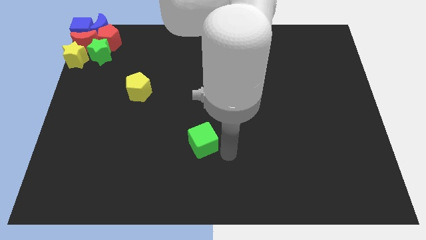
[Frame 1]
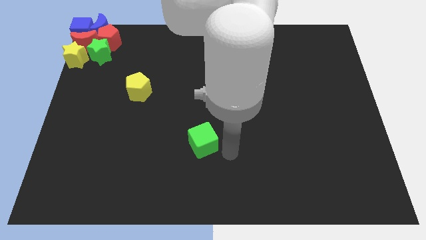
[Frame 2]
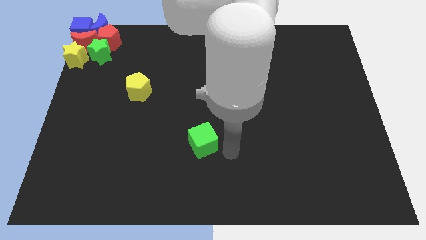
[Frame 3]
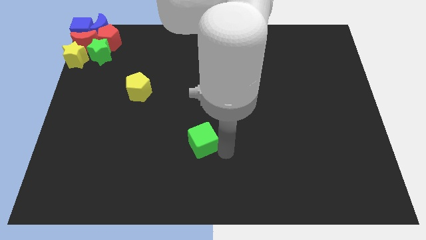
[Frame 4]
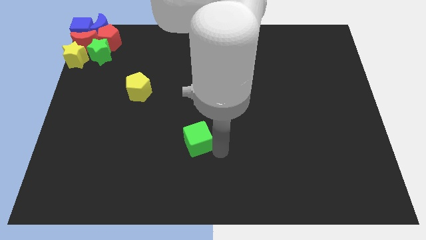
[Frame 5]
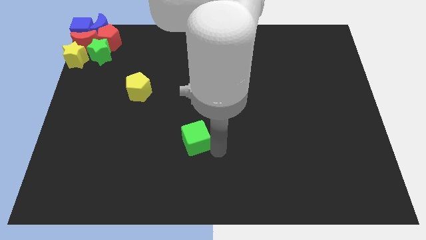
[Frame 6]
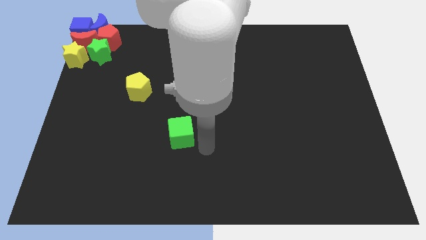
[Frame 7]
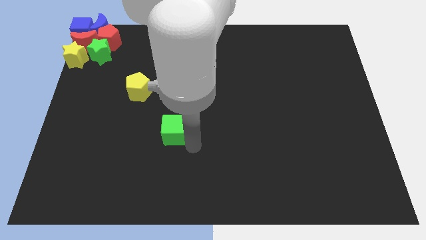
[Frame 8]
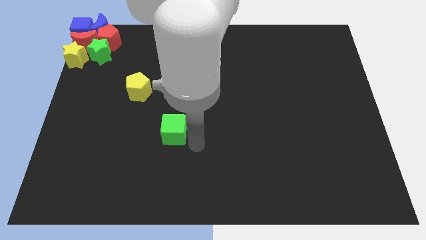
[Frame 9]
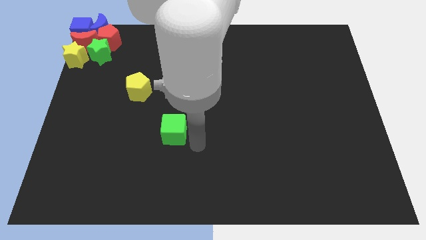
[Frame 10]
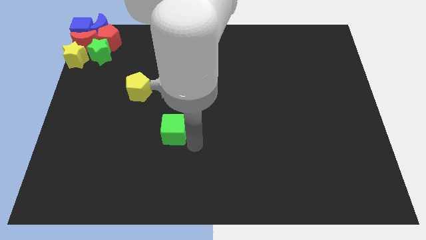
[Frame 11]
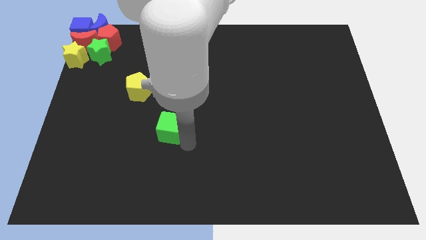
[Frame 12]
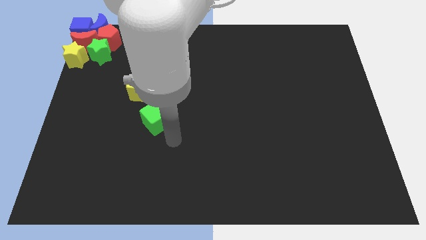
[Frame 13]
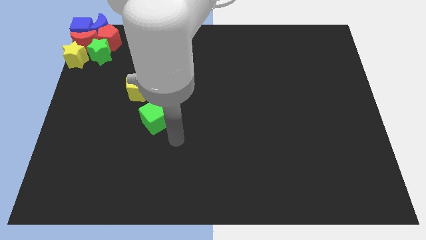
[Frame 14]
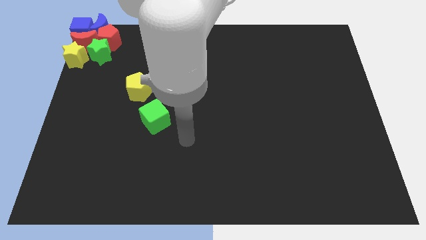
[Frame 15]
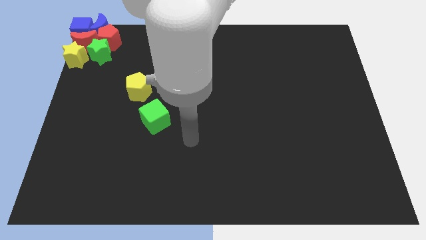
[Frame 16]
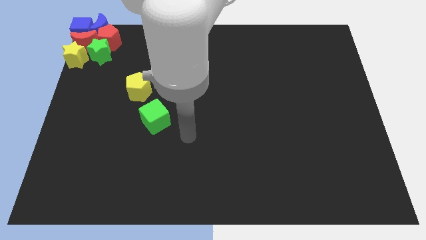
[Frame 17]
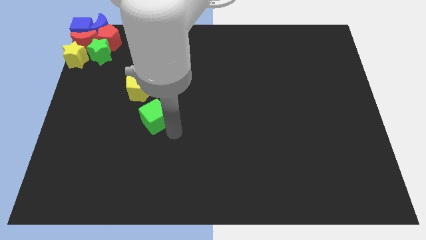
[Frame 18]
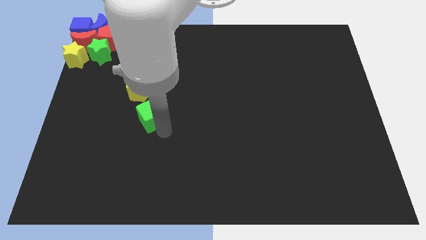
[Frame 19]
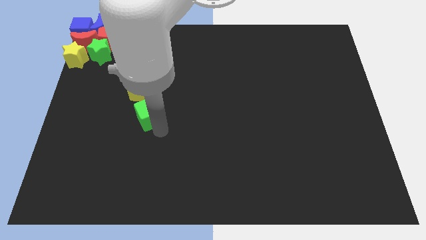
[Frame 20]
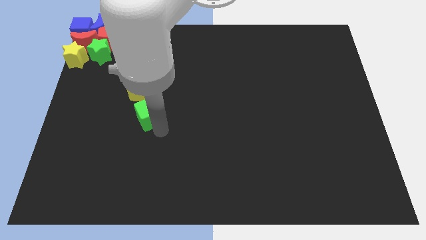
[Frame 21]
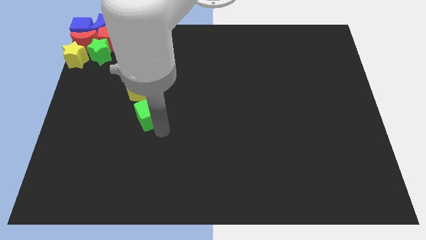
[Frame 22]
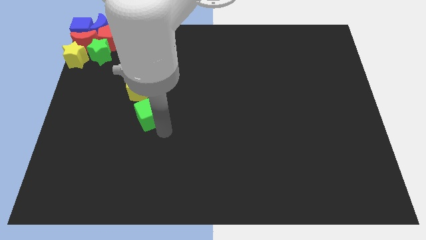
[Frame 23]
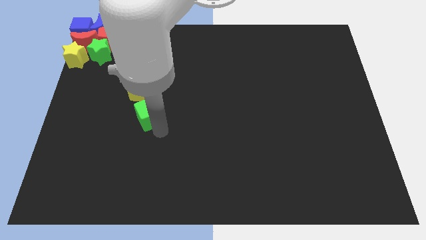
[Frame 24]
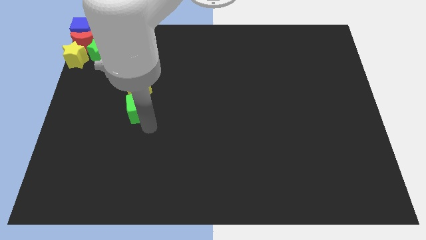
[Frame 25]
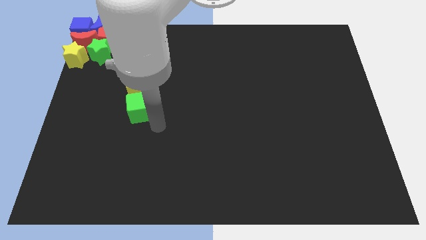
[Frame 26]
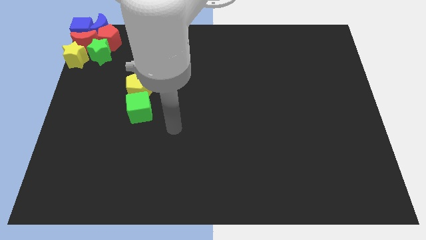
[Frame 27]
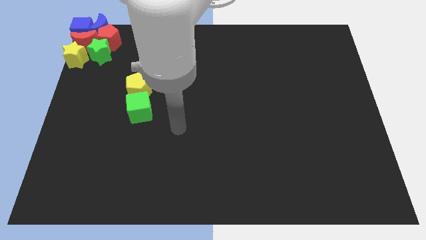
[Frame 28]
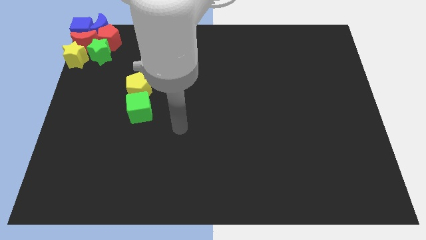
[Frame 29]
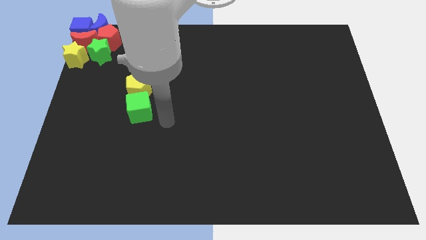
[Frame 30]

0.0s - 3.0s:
make the green cube and the yellow pentagon together

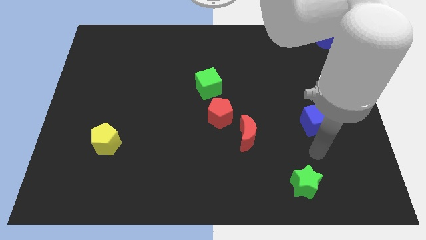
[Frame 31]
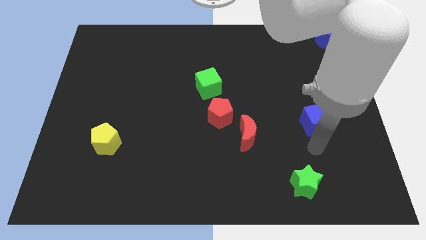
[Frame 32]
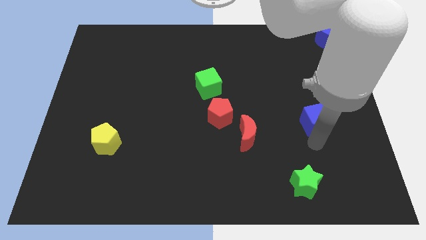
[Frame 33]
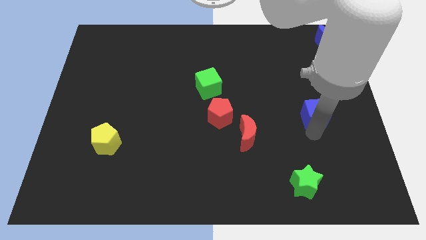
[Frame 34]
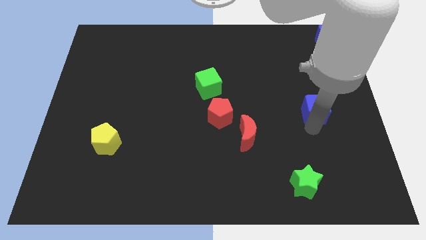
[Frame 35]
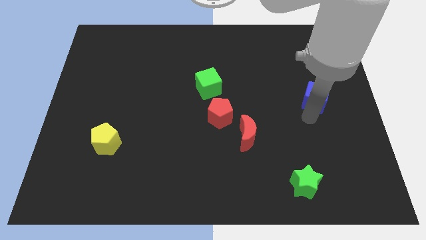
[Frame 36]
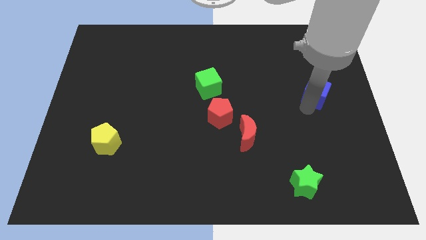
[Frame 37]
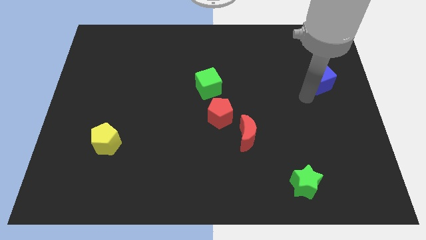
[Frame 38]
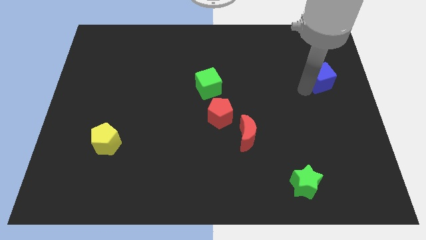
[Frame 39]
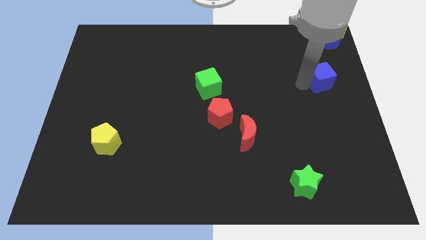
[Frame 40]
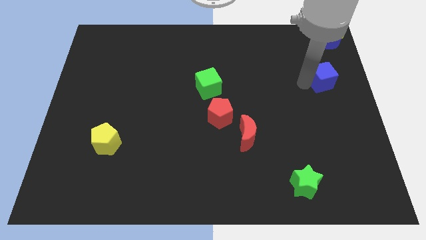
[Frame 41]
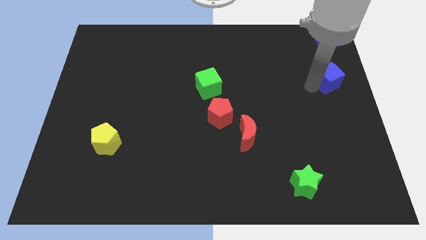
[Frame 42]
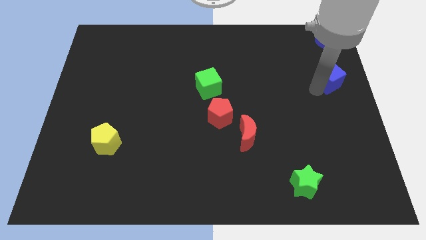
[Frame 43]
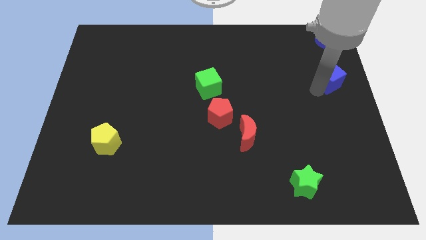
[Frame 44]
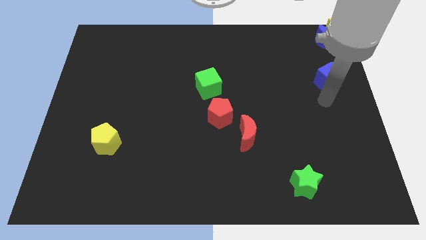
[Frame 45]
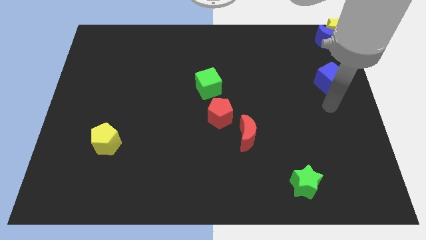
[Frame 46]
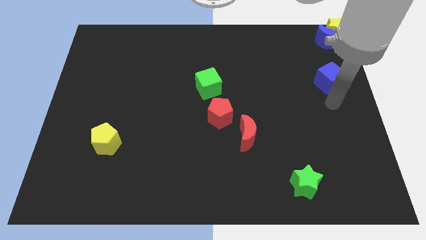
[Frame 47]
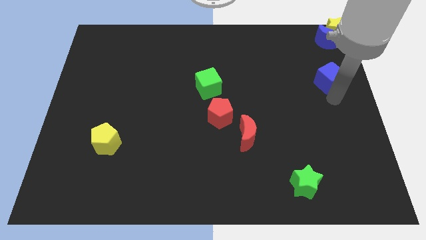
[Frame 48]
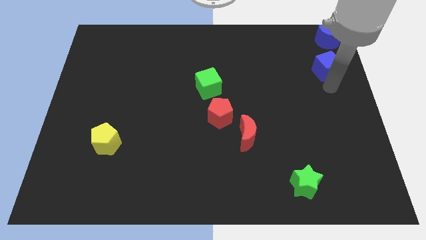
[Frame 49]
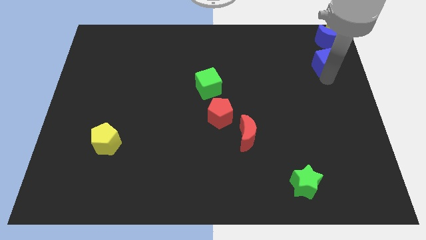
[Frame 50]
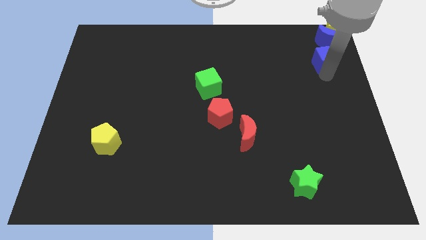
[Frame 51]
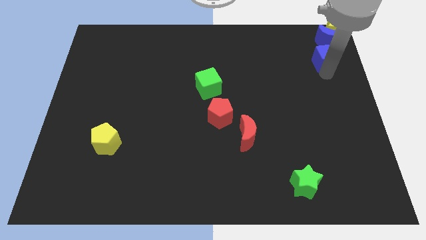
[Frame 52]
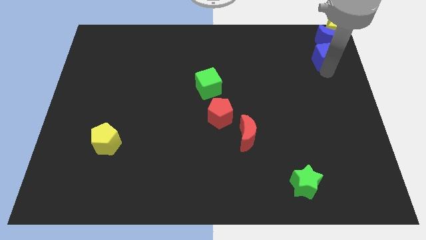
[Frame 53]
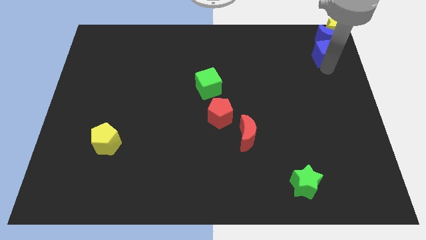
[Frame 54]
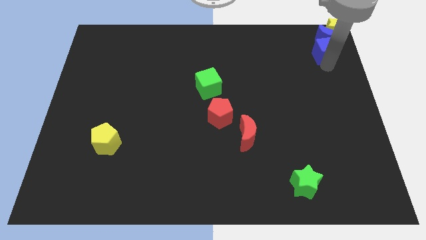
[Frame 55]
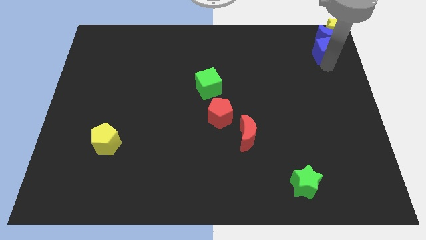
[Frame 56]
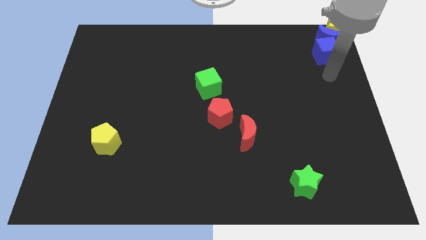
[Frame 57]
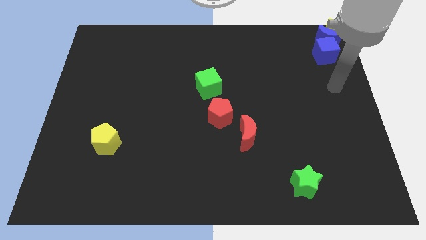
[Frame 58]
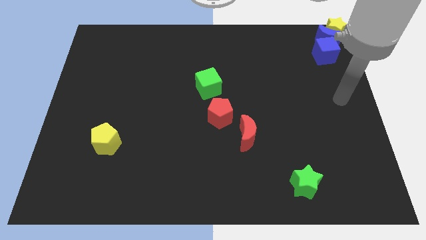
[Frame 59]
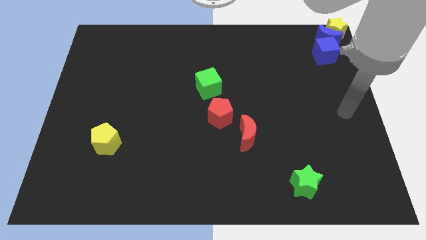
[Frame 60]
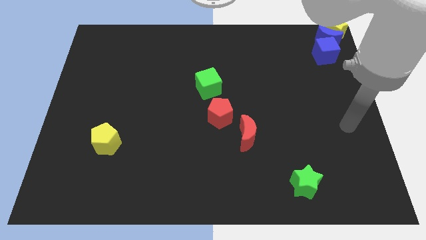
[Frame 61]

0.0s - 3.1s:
place the blue cube below the blue moon

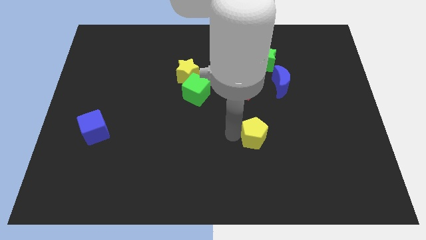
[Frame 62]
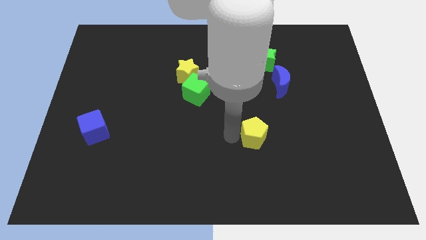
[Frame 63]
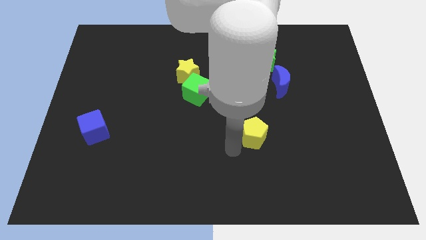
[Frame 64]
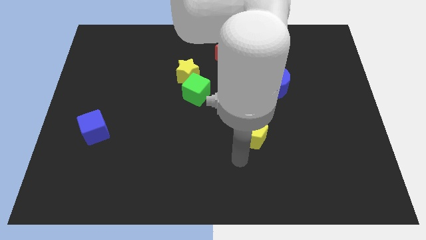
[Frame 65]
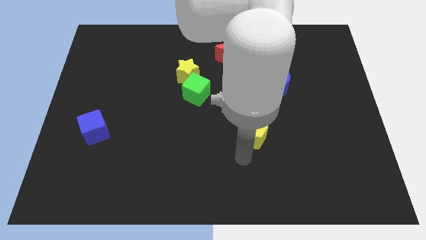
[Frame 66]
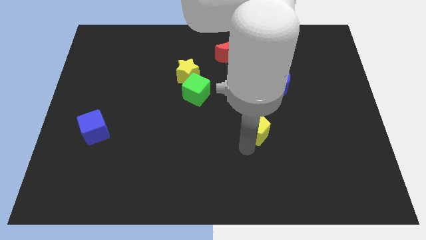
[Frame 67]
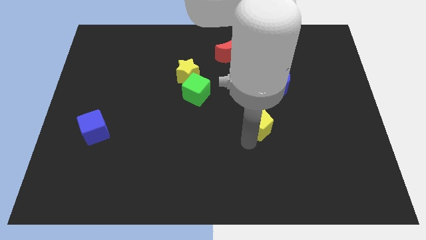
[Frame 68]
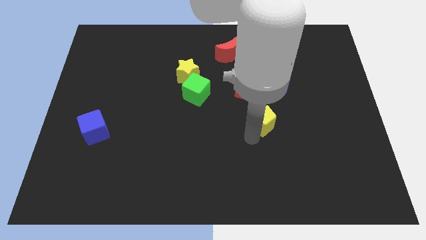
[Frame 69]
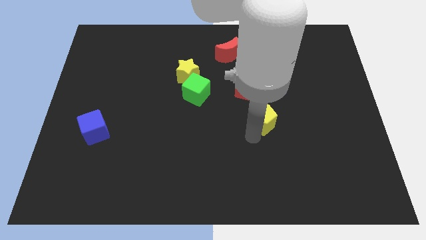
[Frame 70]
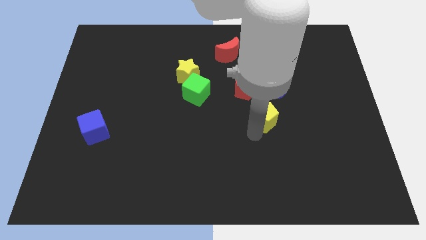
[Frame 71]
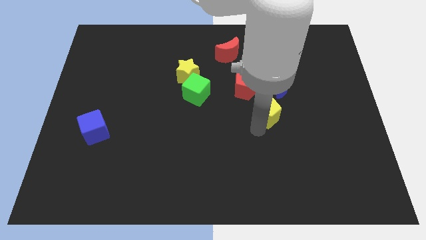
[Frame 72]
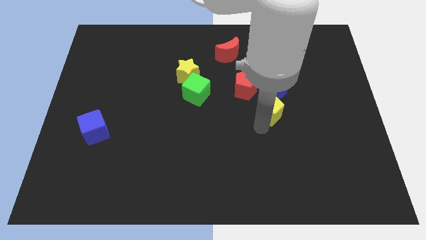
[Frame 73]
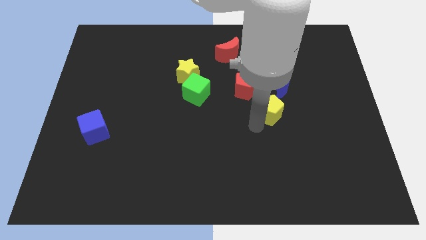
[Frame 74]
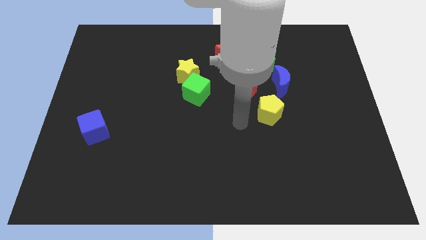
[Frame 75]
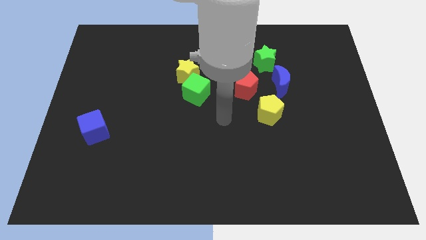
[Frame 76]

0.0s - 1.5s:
slide the yellow pentagon close to the blue moon

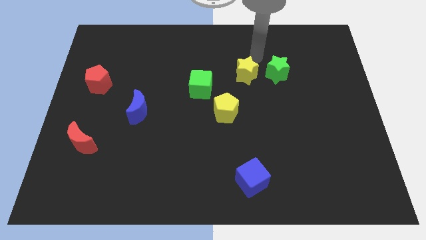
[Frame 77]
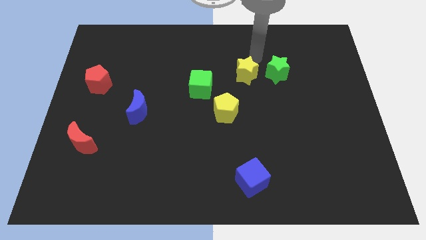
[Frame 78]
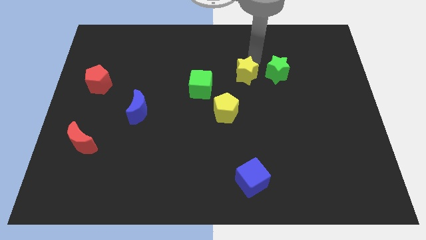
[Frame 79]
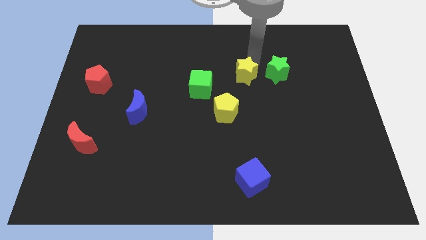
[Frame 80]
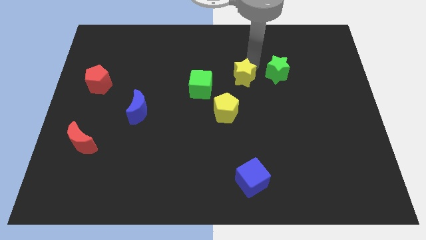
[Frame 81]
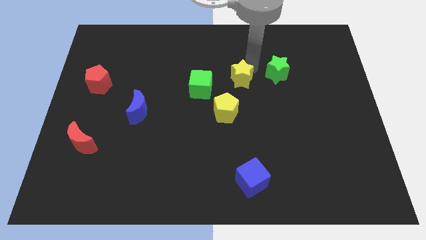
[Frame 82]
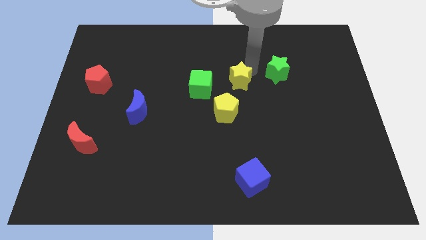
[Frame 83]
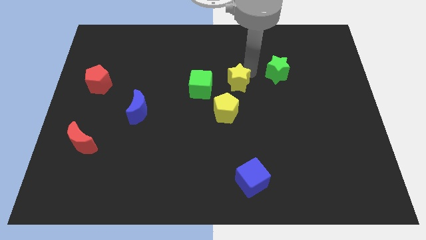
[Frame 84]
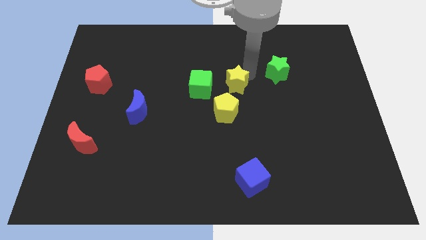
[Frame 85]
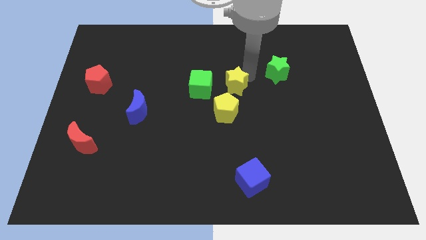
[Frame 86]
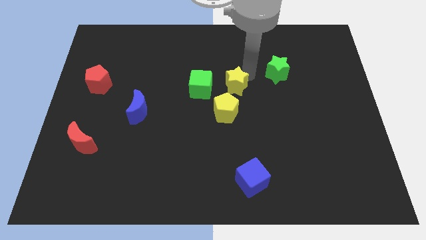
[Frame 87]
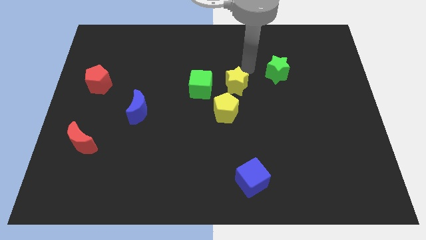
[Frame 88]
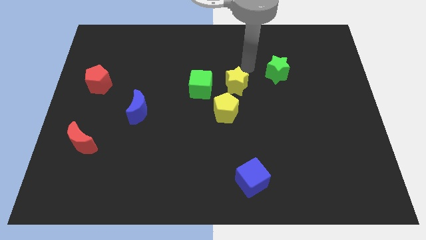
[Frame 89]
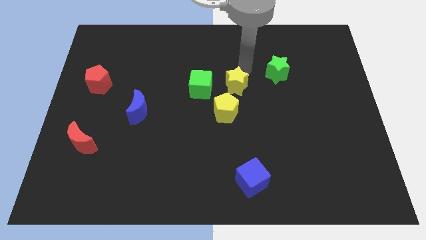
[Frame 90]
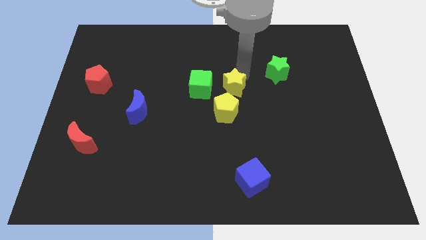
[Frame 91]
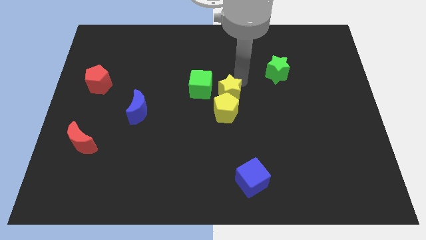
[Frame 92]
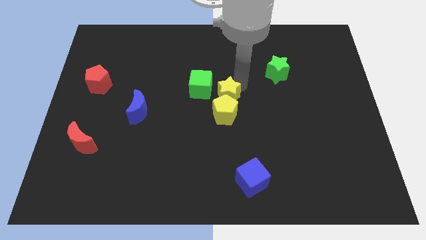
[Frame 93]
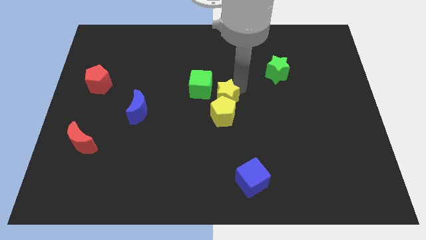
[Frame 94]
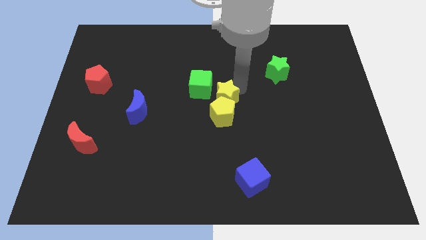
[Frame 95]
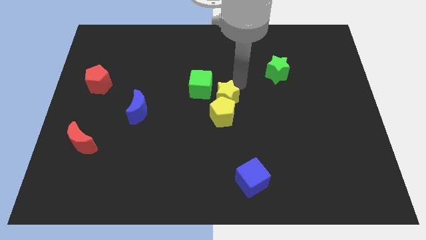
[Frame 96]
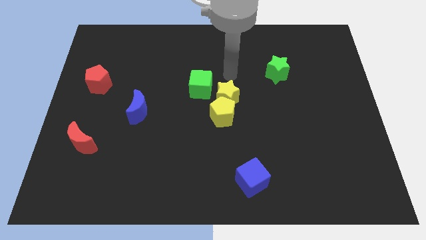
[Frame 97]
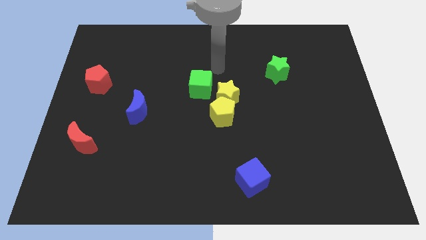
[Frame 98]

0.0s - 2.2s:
place yellow star above yellow pentagon
